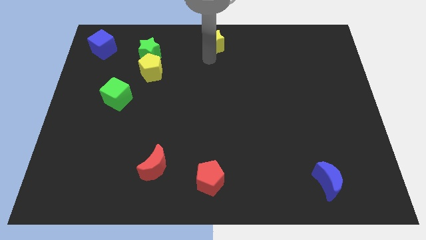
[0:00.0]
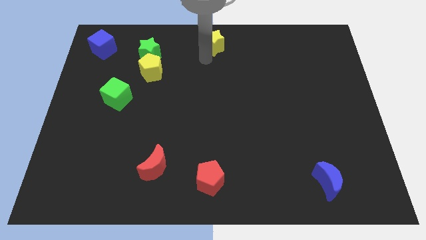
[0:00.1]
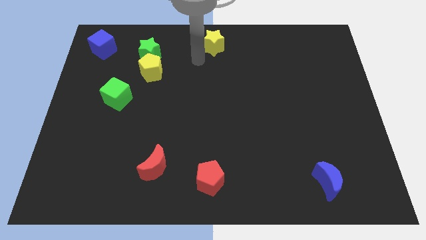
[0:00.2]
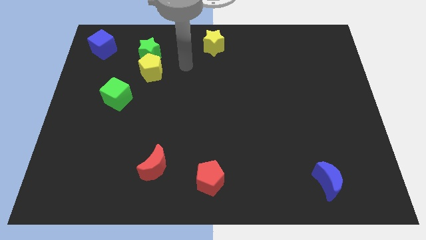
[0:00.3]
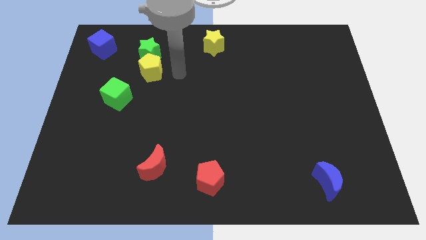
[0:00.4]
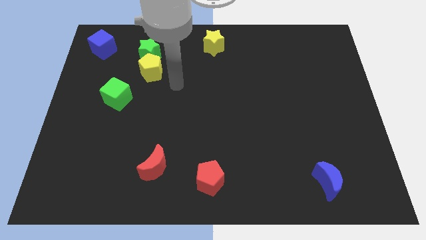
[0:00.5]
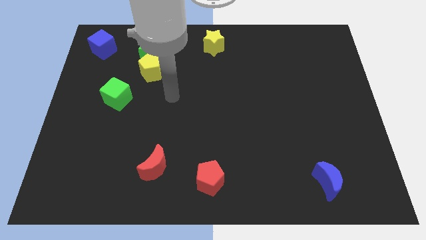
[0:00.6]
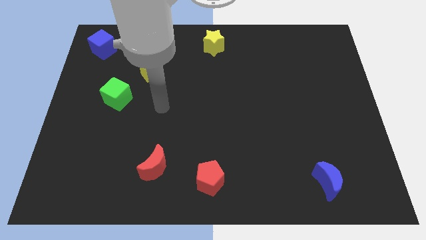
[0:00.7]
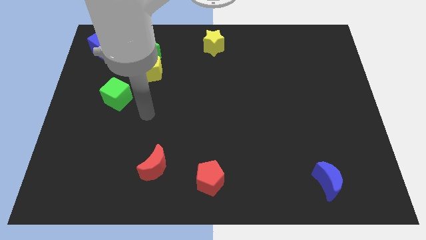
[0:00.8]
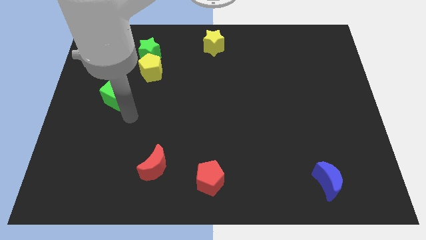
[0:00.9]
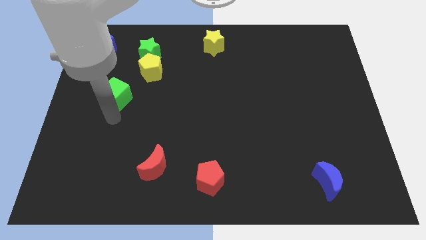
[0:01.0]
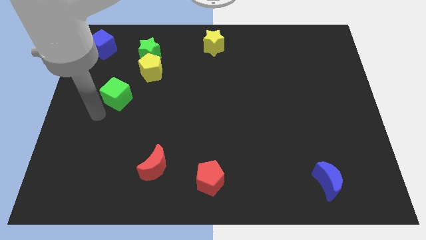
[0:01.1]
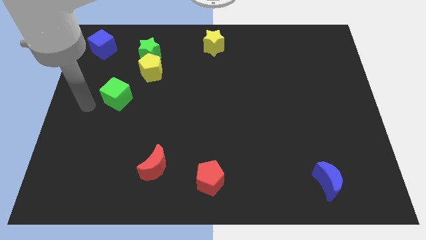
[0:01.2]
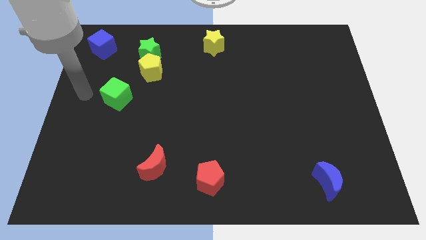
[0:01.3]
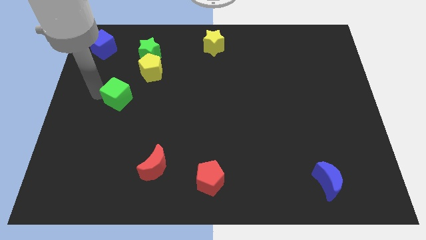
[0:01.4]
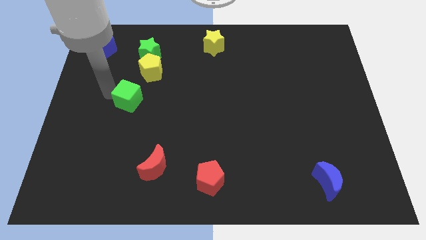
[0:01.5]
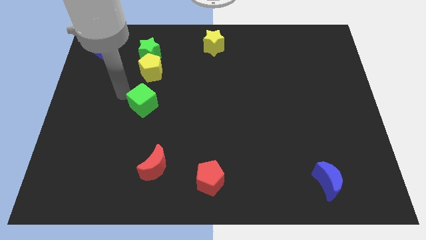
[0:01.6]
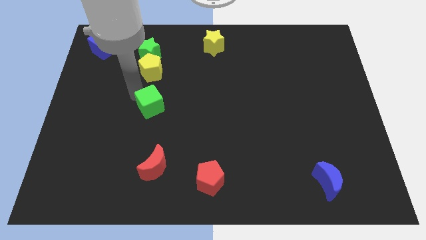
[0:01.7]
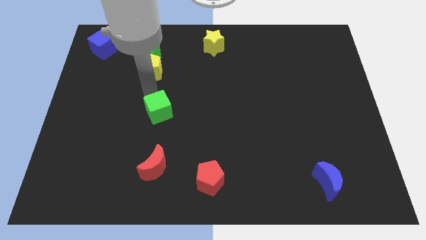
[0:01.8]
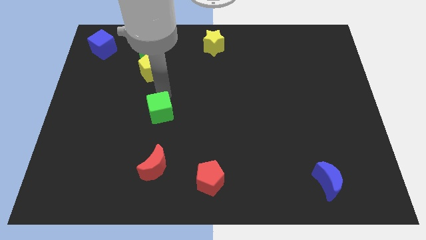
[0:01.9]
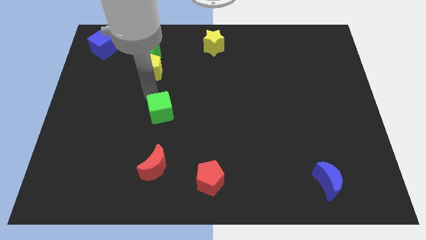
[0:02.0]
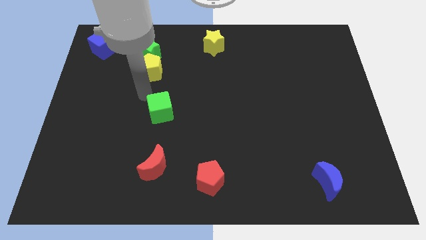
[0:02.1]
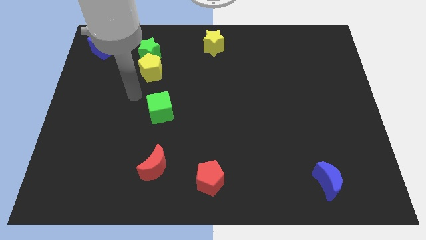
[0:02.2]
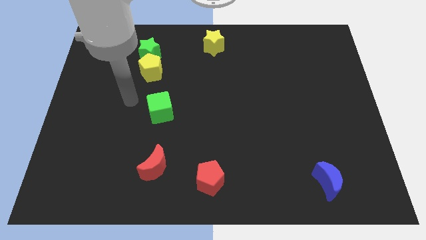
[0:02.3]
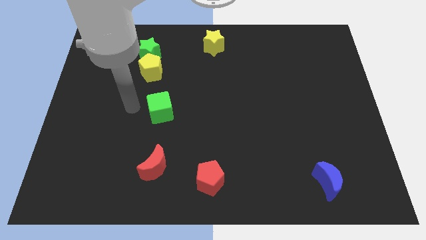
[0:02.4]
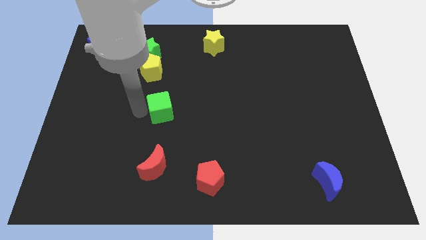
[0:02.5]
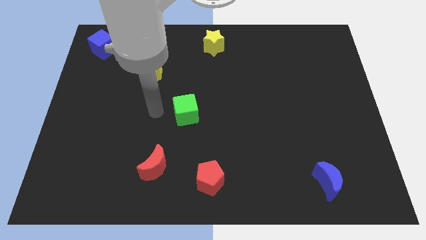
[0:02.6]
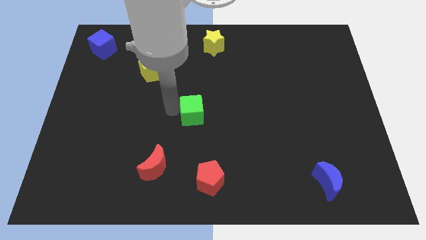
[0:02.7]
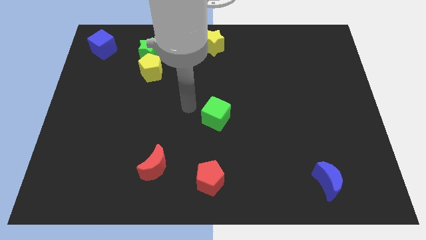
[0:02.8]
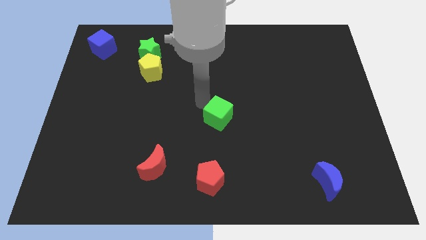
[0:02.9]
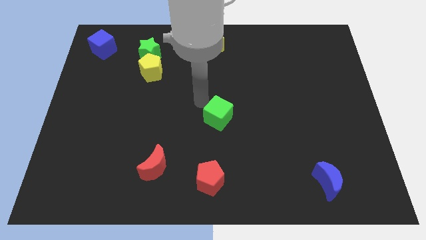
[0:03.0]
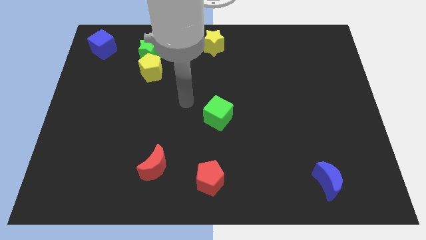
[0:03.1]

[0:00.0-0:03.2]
move the green cube above the red pentagon

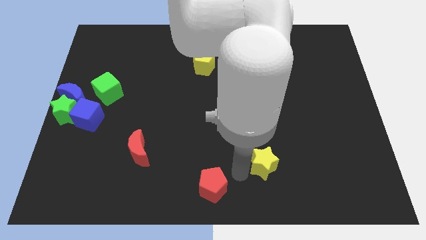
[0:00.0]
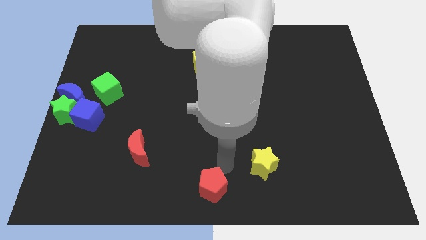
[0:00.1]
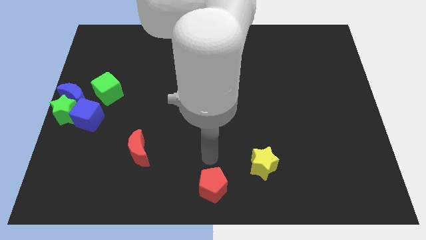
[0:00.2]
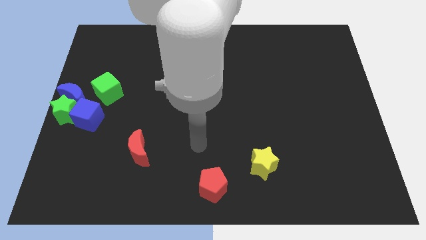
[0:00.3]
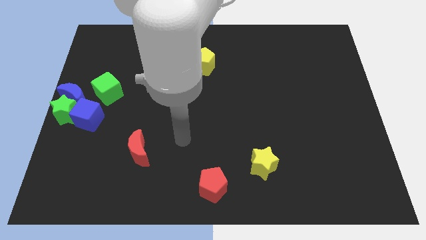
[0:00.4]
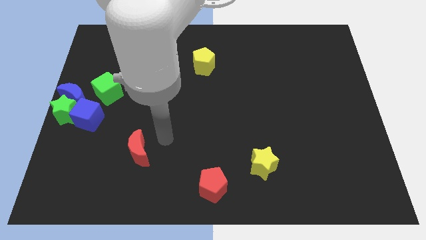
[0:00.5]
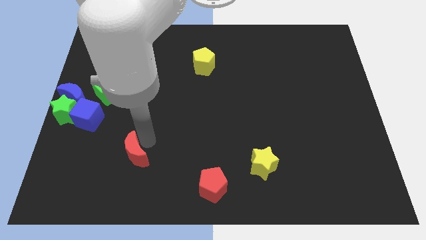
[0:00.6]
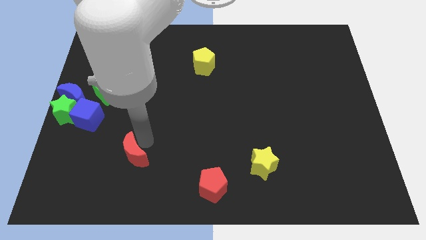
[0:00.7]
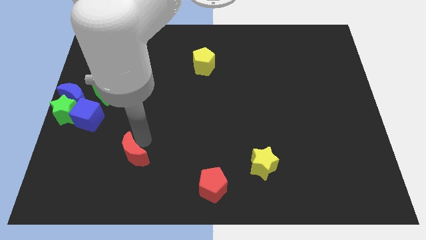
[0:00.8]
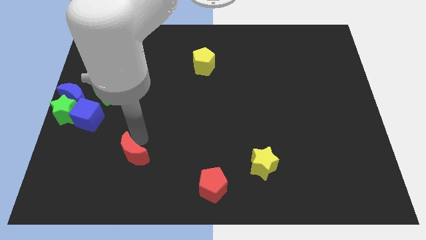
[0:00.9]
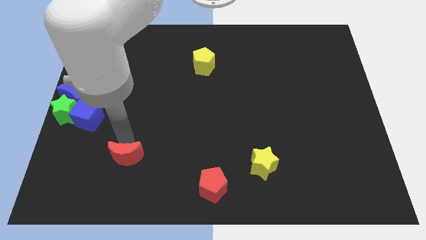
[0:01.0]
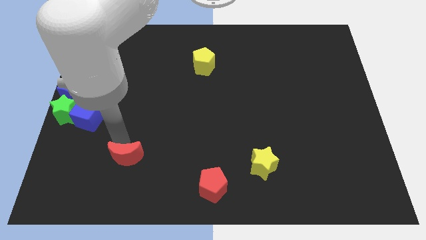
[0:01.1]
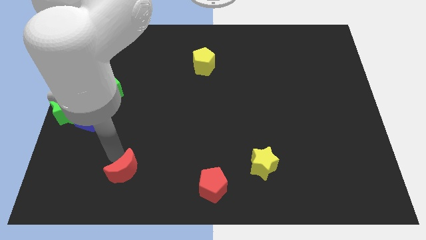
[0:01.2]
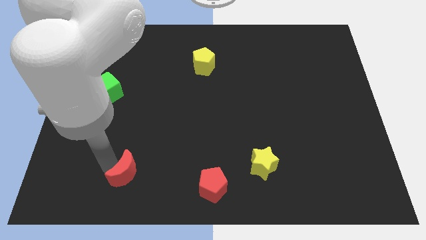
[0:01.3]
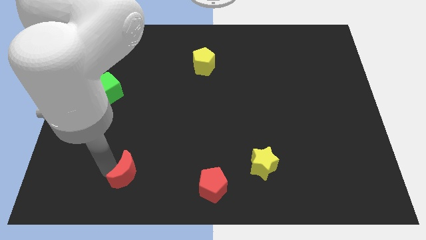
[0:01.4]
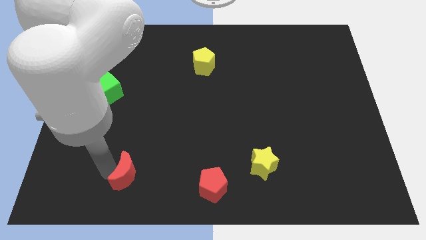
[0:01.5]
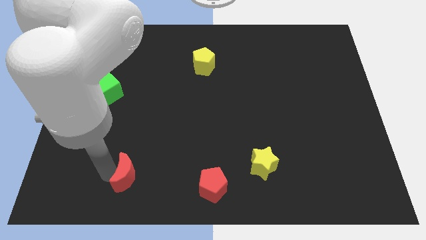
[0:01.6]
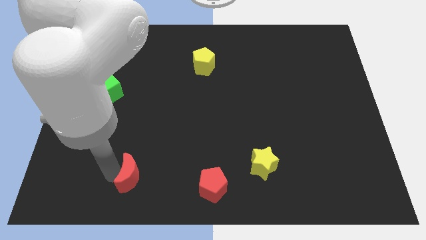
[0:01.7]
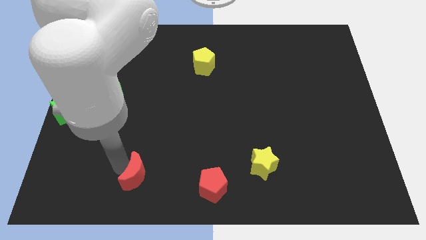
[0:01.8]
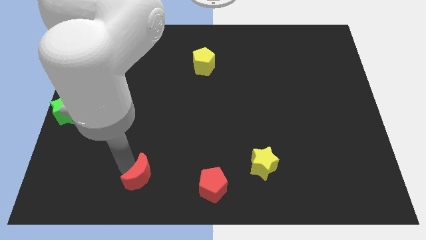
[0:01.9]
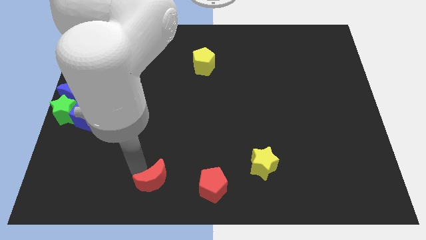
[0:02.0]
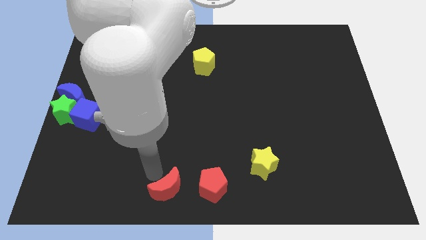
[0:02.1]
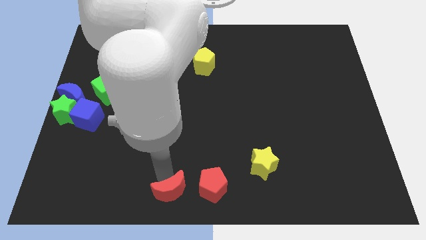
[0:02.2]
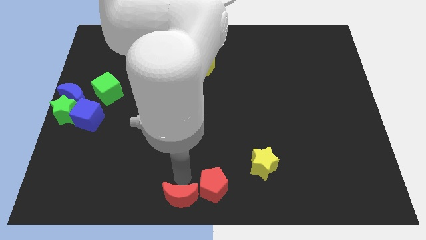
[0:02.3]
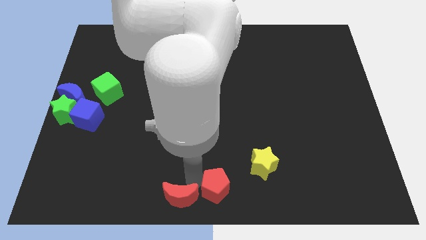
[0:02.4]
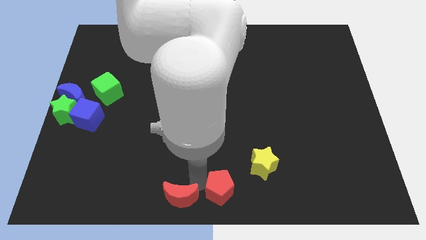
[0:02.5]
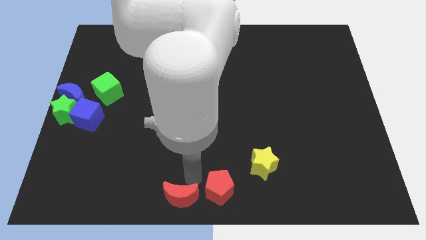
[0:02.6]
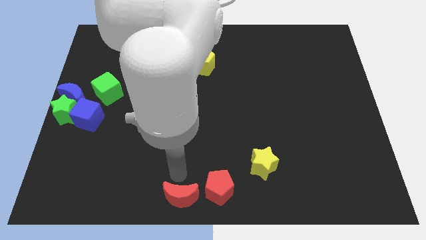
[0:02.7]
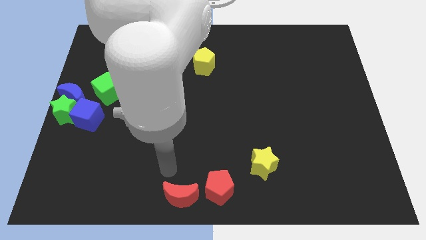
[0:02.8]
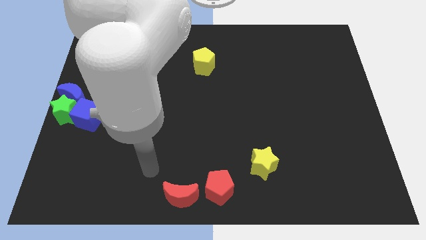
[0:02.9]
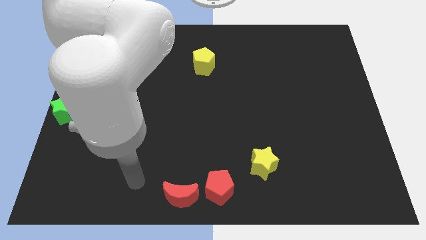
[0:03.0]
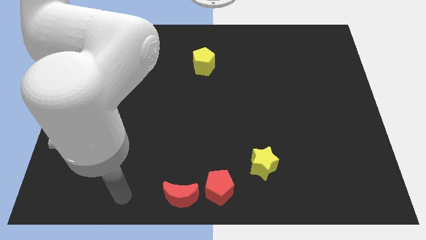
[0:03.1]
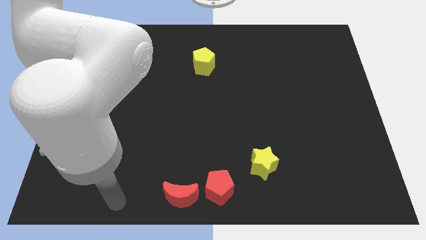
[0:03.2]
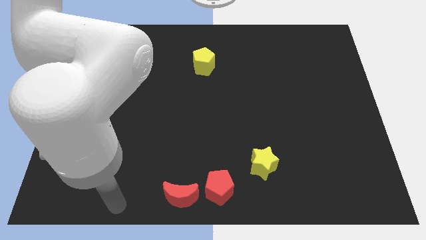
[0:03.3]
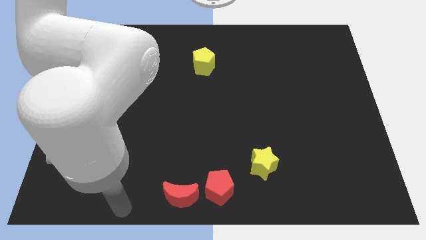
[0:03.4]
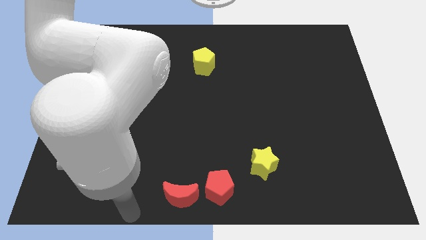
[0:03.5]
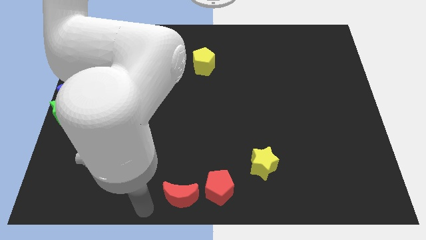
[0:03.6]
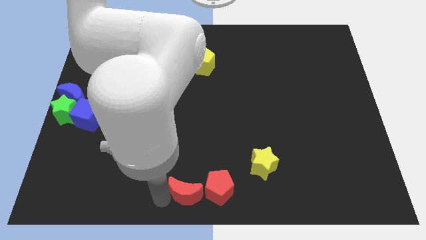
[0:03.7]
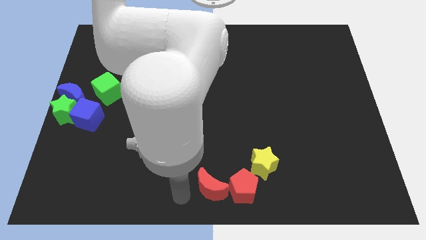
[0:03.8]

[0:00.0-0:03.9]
move red crescent to the left of red pentagon

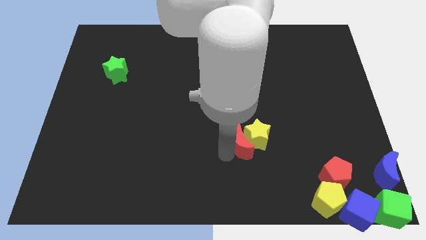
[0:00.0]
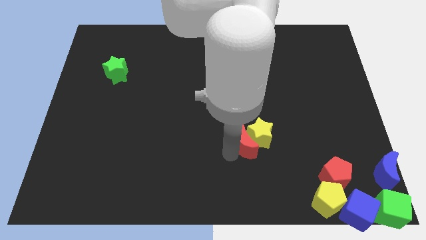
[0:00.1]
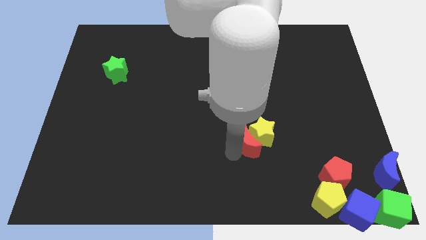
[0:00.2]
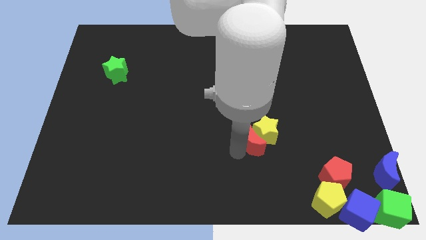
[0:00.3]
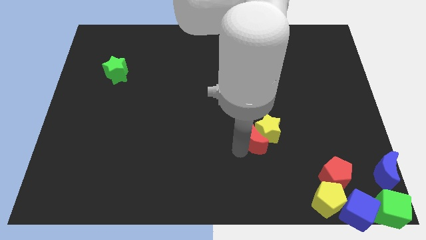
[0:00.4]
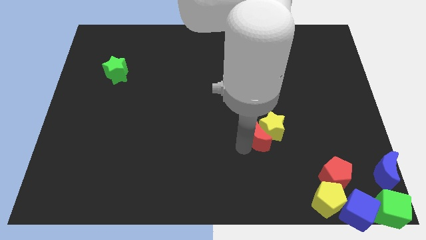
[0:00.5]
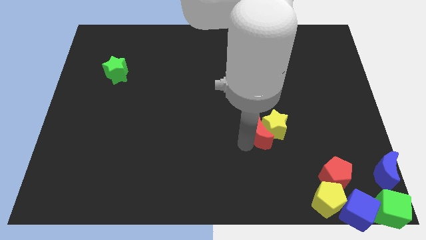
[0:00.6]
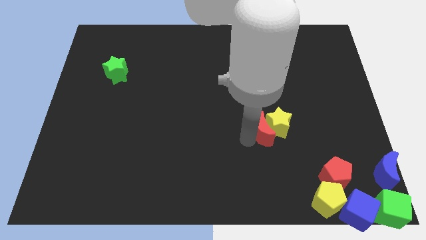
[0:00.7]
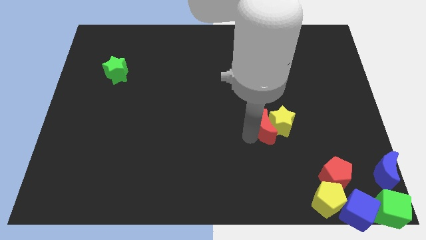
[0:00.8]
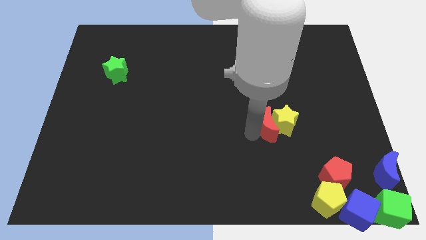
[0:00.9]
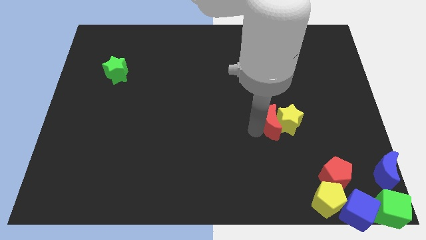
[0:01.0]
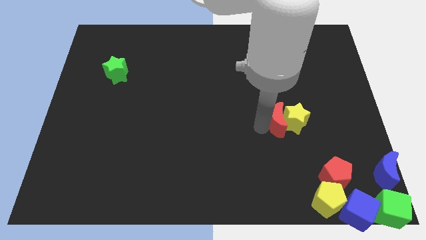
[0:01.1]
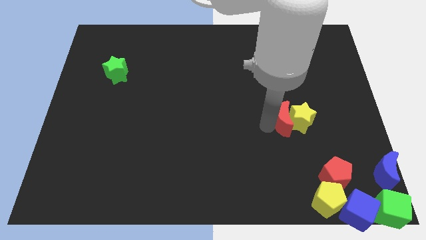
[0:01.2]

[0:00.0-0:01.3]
push the yellow star with the red moon

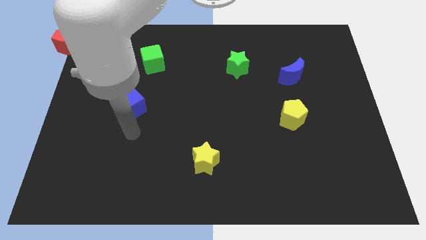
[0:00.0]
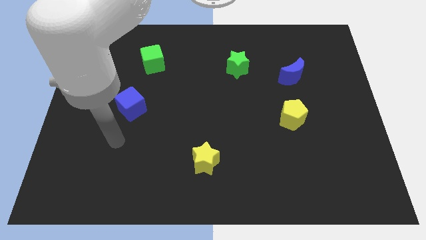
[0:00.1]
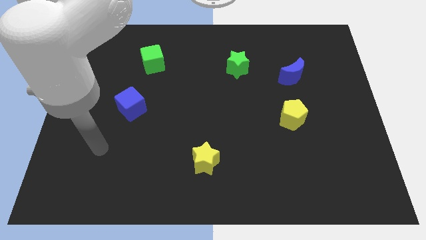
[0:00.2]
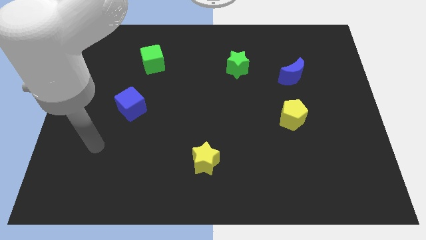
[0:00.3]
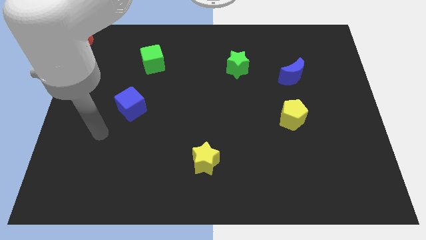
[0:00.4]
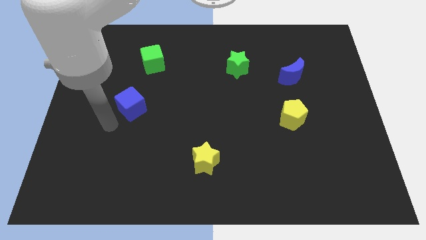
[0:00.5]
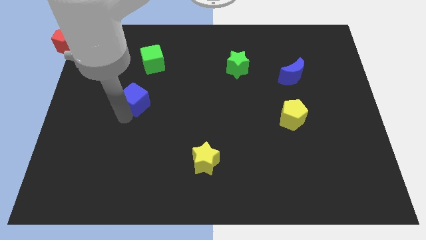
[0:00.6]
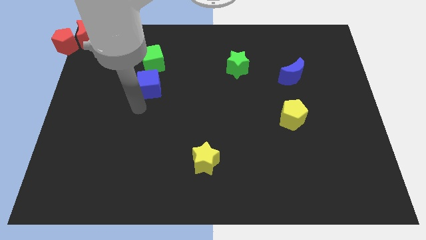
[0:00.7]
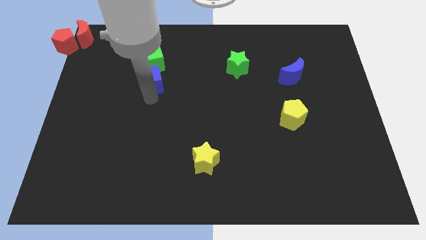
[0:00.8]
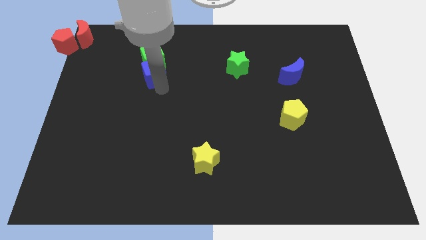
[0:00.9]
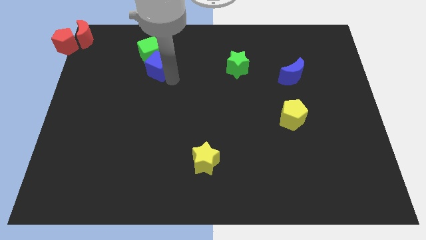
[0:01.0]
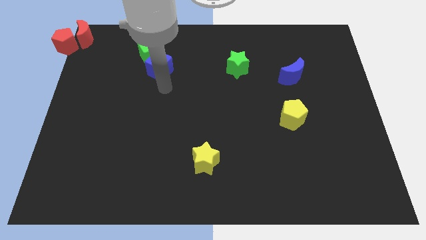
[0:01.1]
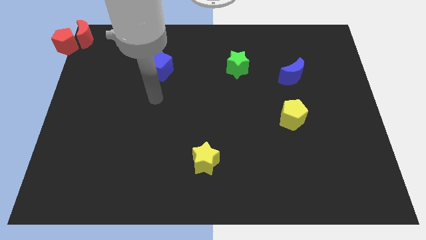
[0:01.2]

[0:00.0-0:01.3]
push blue cube in to green cube
